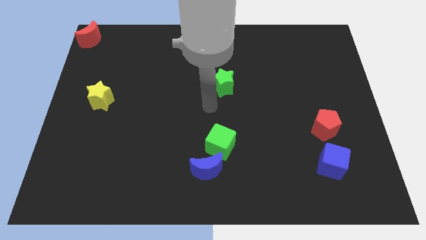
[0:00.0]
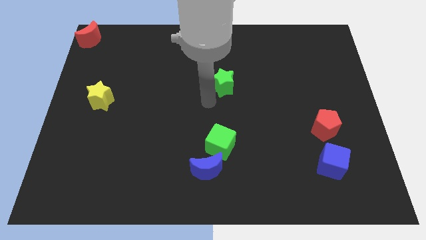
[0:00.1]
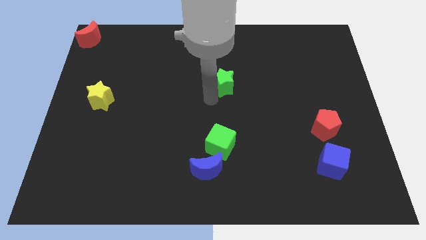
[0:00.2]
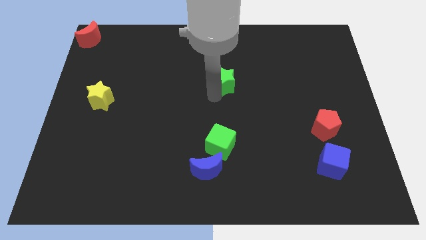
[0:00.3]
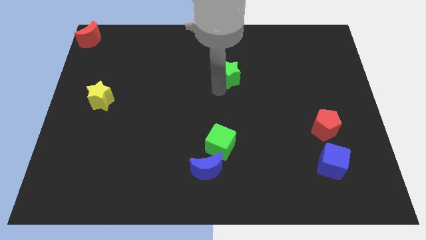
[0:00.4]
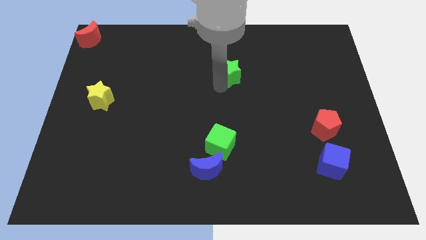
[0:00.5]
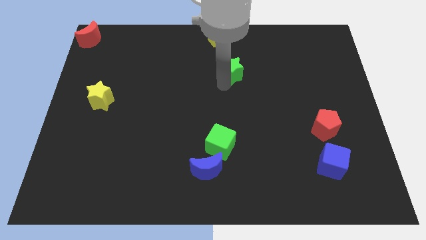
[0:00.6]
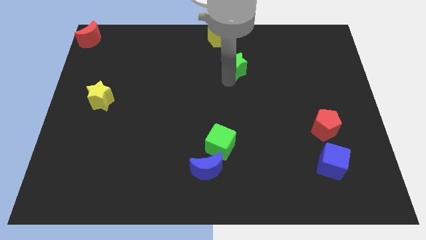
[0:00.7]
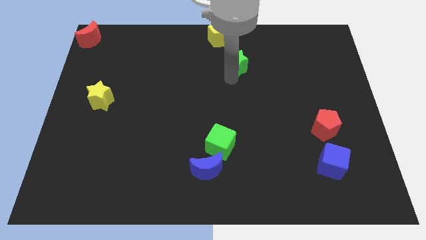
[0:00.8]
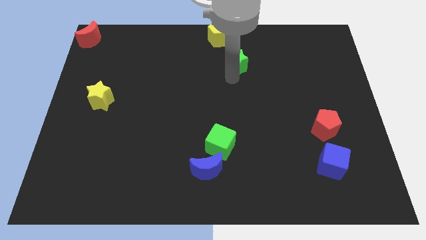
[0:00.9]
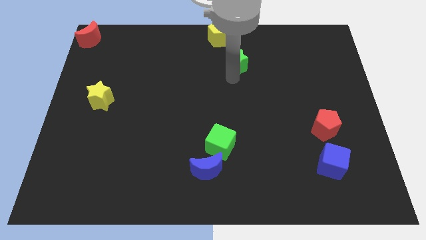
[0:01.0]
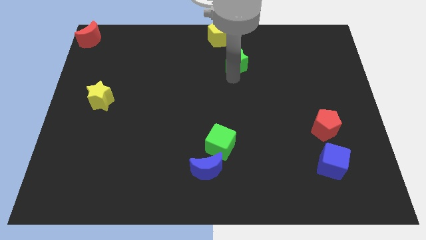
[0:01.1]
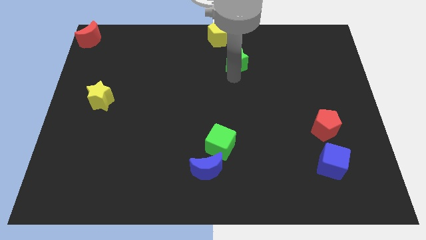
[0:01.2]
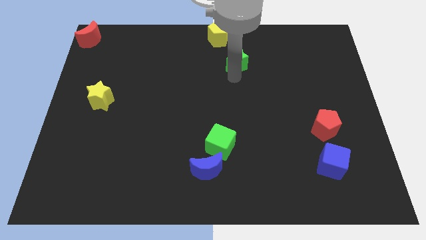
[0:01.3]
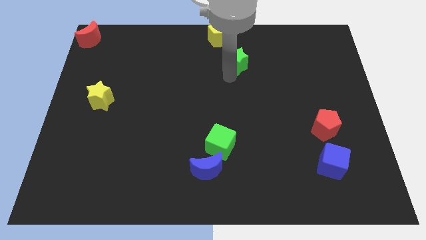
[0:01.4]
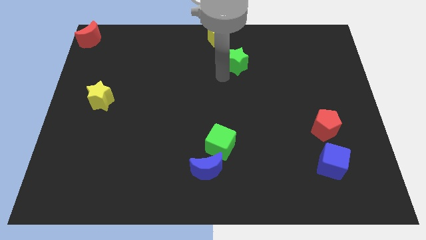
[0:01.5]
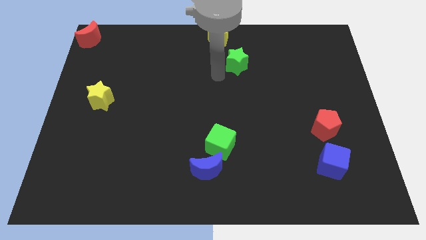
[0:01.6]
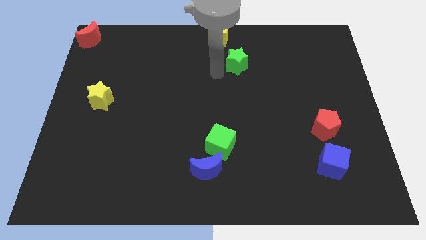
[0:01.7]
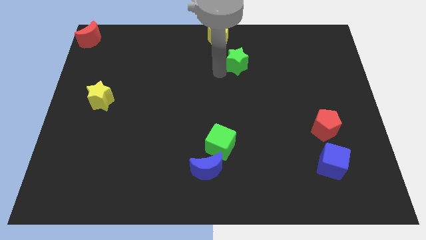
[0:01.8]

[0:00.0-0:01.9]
place the green star to the bottom right of yellow pentagon

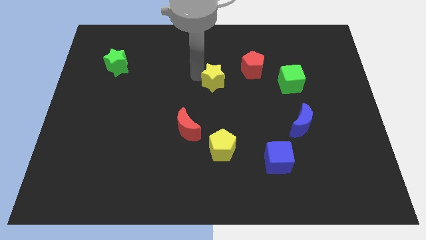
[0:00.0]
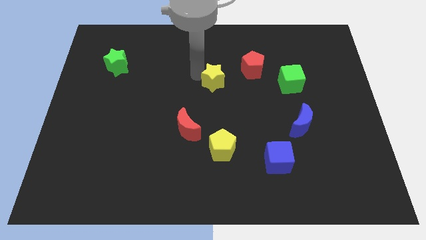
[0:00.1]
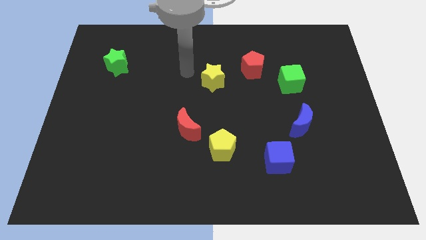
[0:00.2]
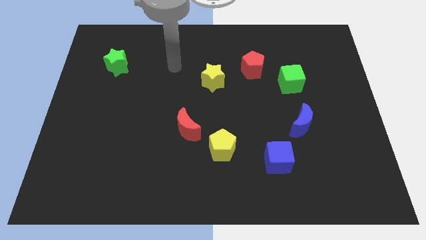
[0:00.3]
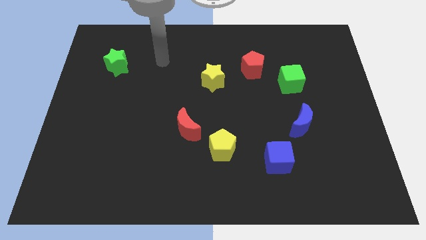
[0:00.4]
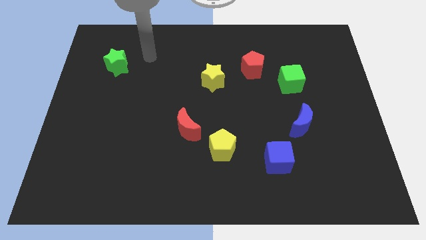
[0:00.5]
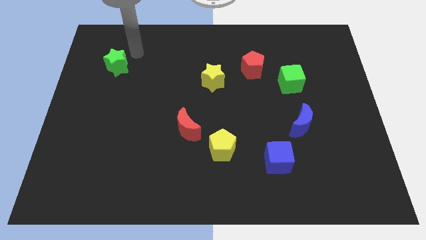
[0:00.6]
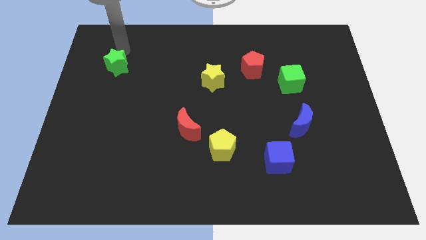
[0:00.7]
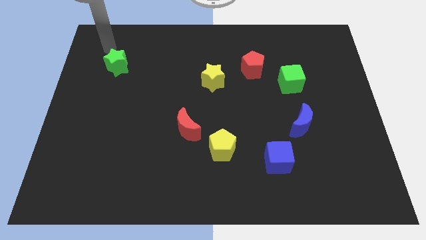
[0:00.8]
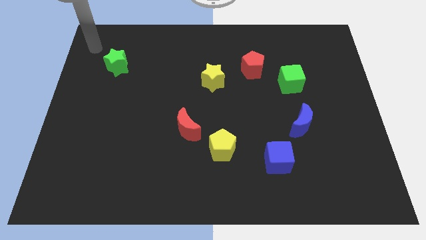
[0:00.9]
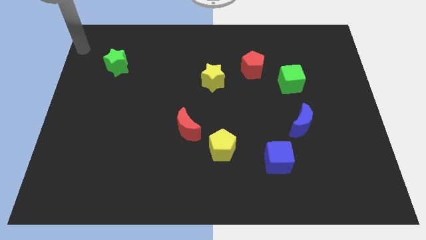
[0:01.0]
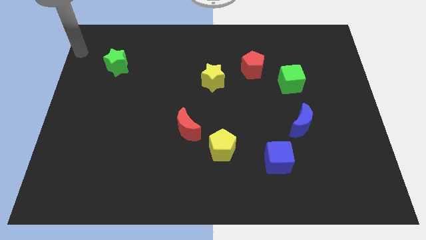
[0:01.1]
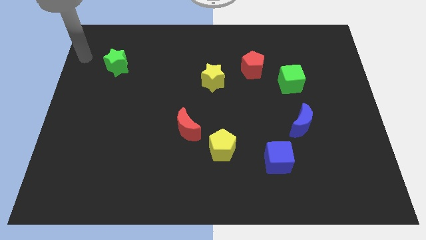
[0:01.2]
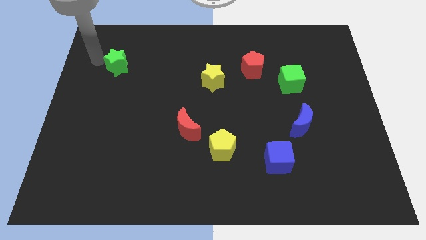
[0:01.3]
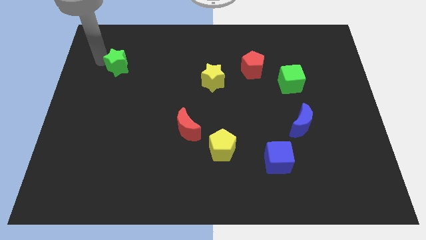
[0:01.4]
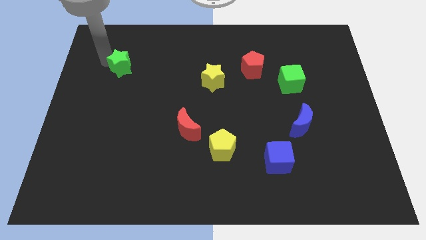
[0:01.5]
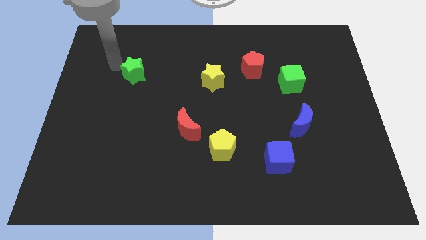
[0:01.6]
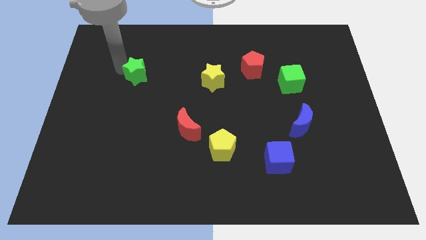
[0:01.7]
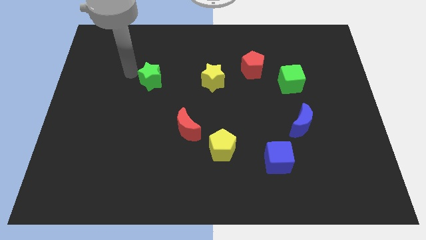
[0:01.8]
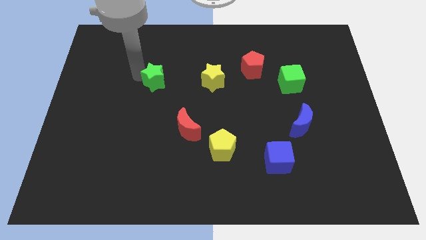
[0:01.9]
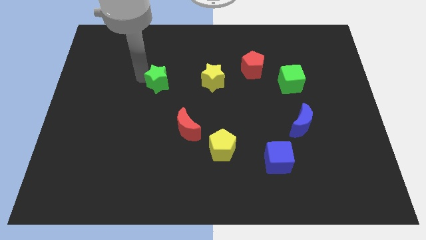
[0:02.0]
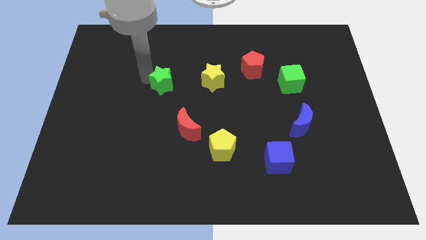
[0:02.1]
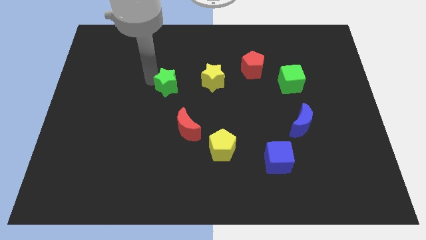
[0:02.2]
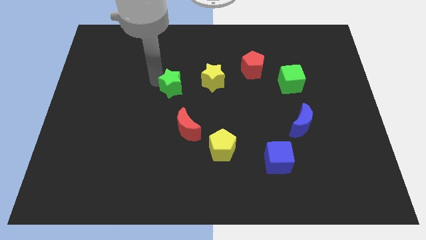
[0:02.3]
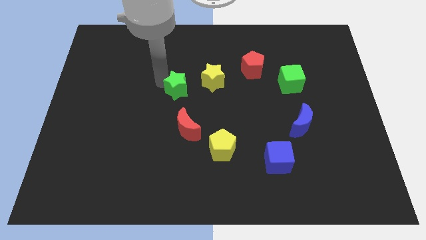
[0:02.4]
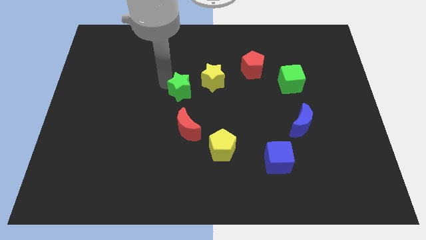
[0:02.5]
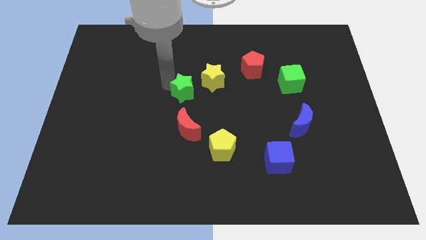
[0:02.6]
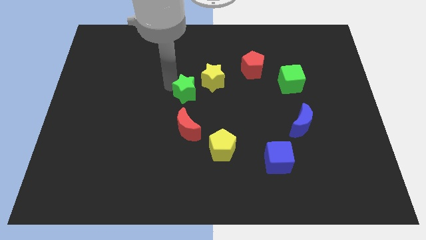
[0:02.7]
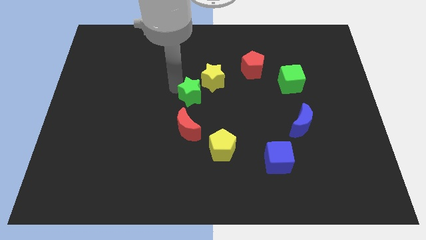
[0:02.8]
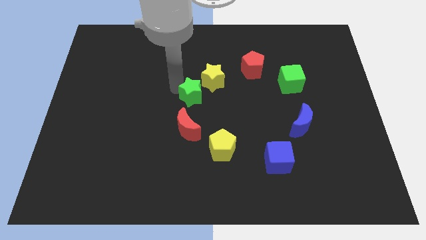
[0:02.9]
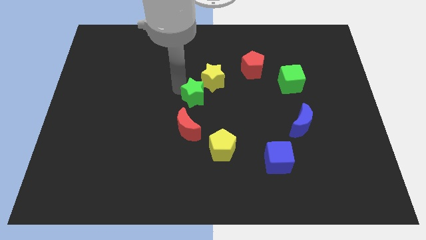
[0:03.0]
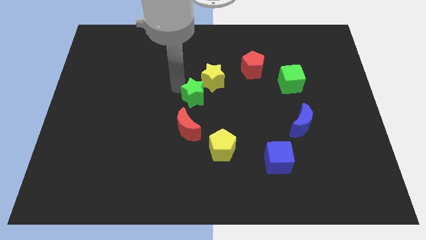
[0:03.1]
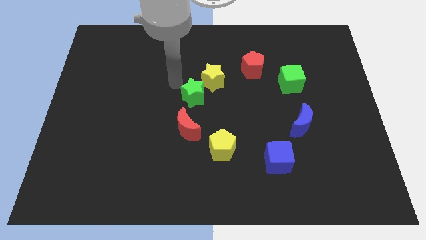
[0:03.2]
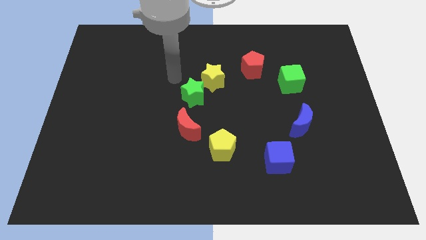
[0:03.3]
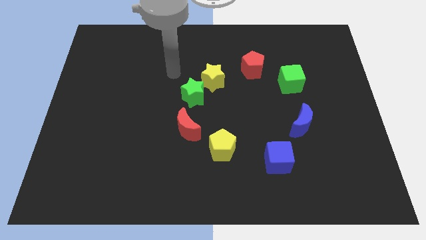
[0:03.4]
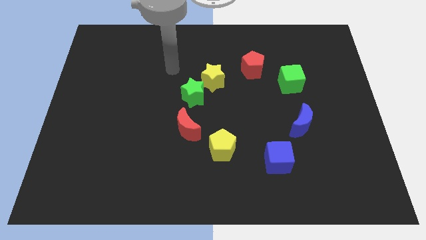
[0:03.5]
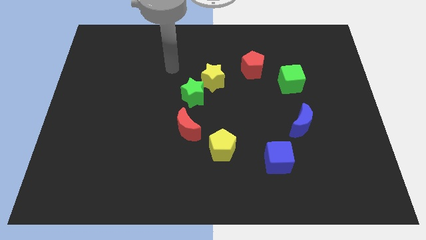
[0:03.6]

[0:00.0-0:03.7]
place the green star in between the yellow star and red moon

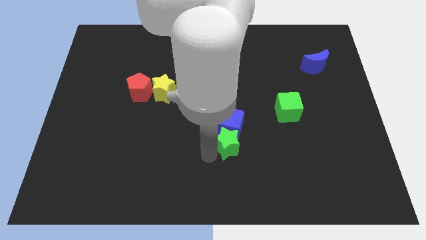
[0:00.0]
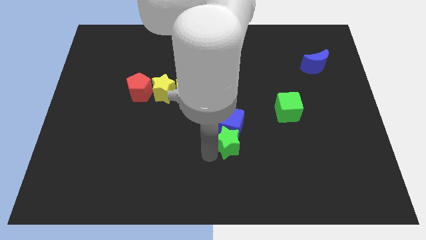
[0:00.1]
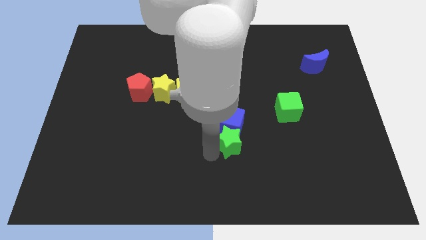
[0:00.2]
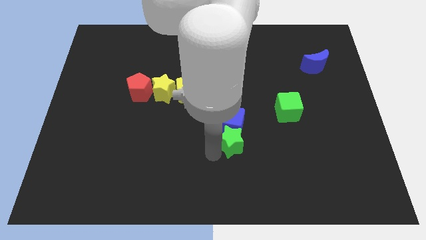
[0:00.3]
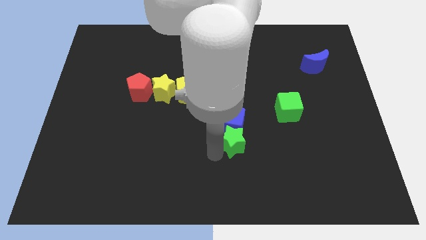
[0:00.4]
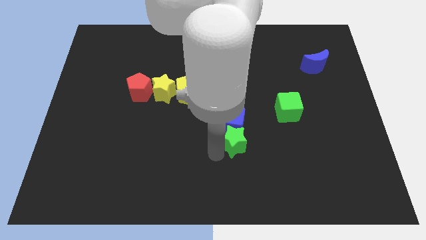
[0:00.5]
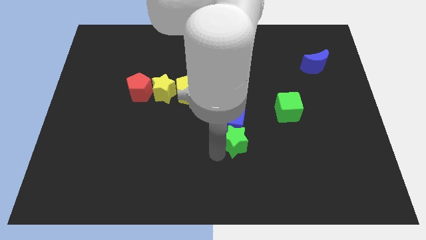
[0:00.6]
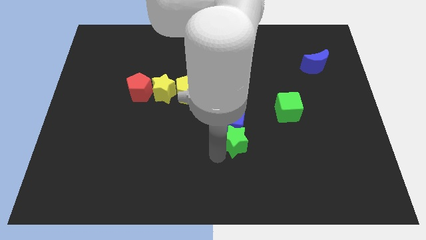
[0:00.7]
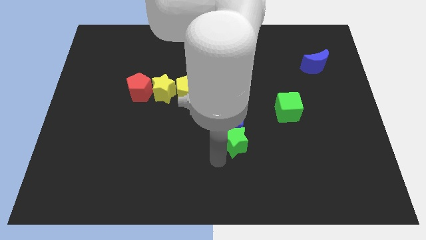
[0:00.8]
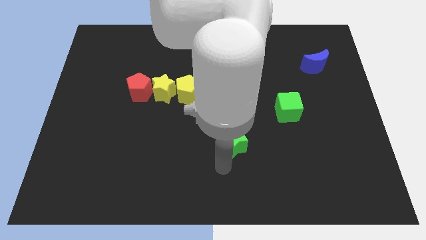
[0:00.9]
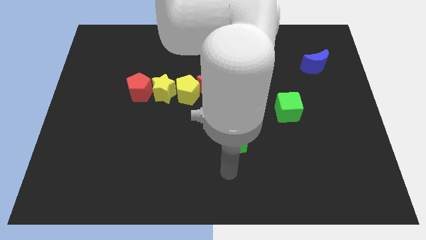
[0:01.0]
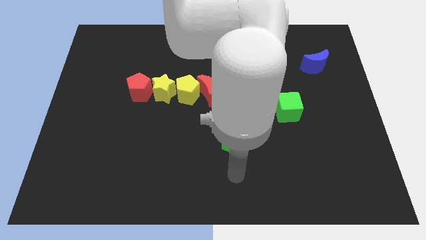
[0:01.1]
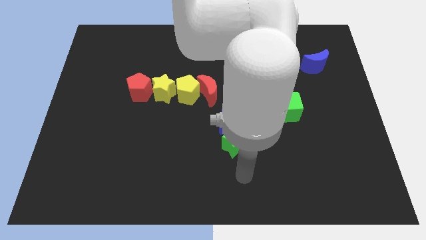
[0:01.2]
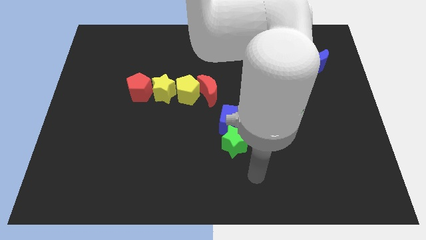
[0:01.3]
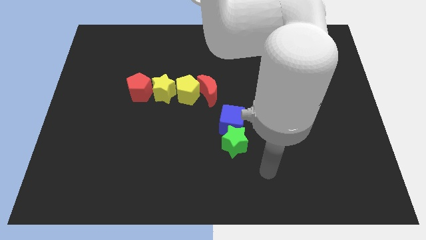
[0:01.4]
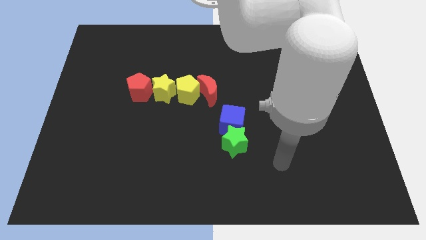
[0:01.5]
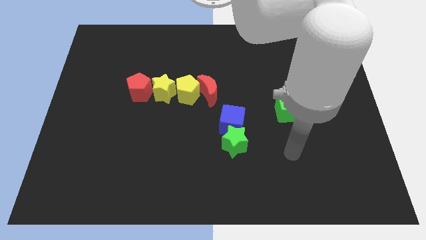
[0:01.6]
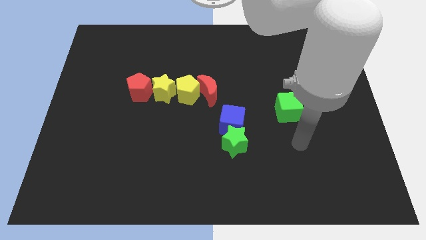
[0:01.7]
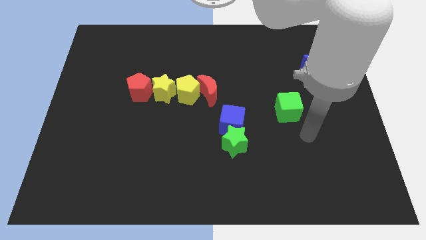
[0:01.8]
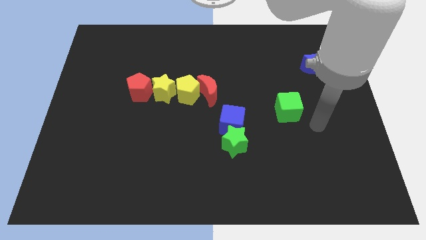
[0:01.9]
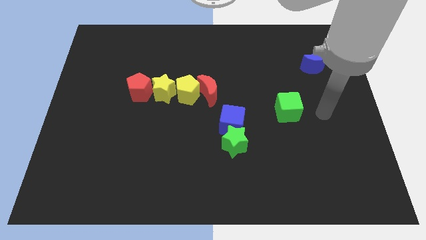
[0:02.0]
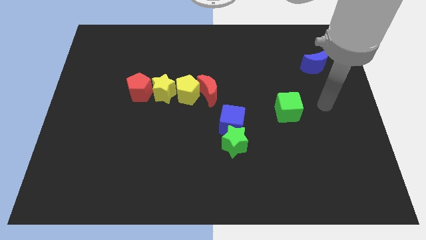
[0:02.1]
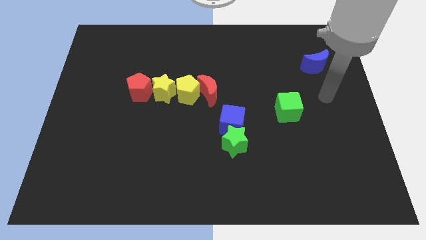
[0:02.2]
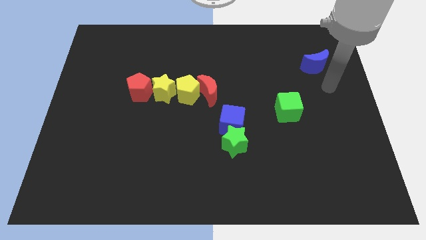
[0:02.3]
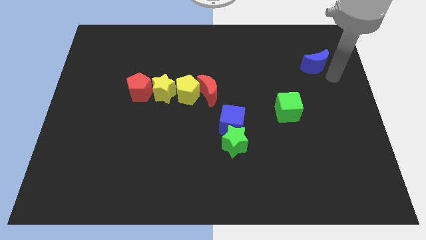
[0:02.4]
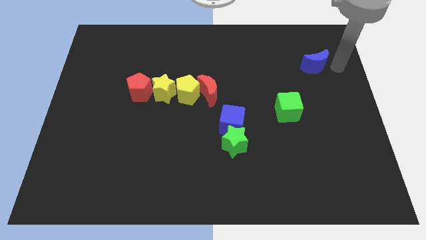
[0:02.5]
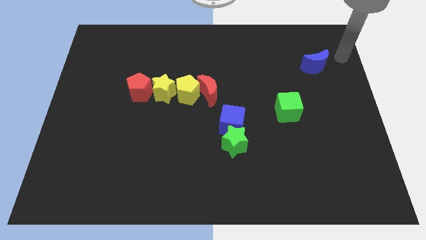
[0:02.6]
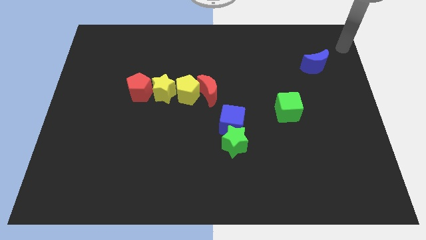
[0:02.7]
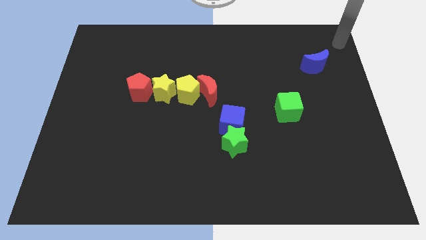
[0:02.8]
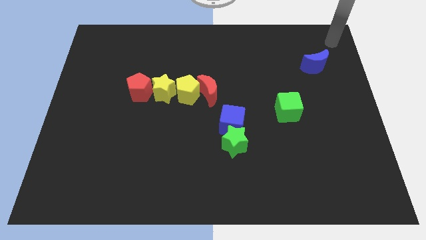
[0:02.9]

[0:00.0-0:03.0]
move the arm towards the top right corner of the board

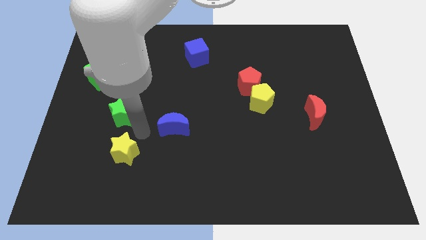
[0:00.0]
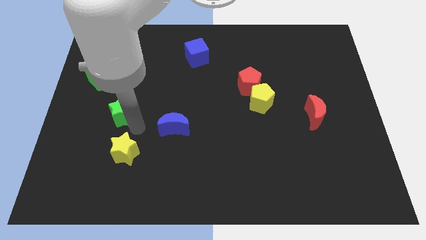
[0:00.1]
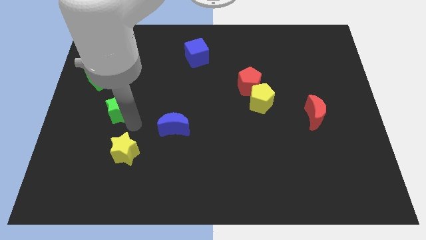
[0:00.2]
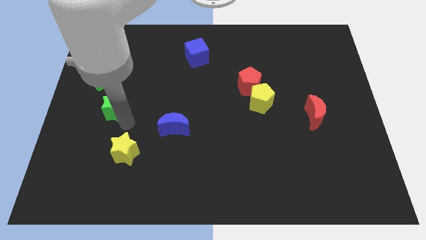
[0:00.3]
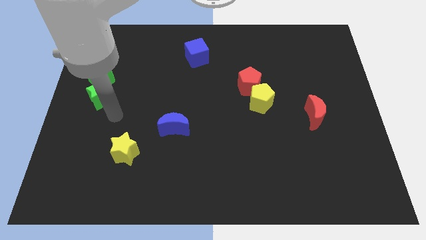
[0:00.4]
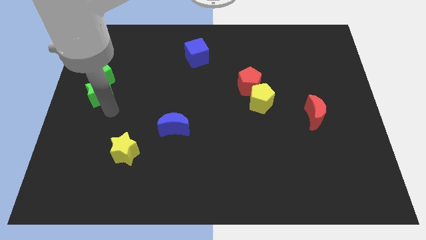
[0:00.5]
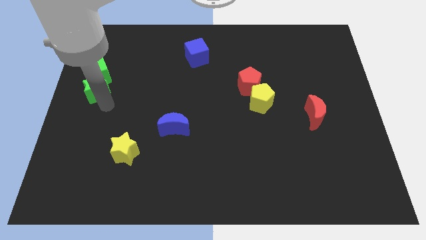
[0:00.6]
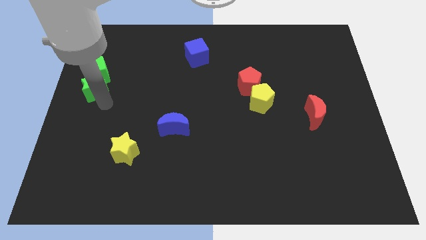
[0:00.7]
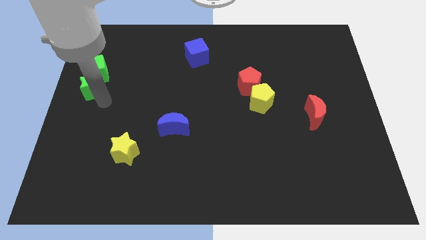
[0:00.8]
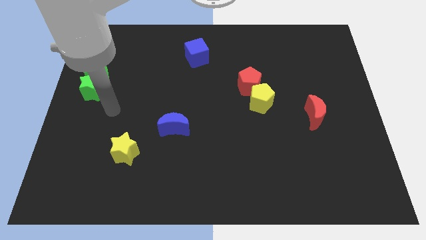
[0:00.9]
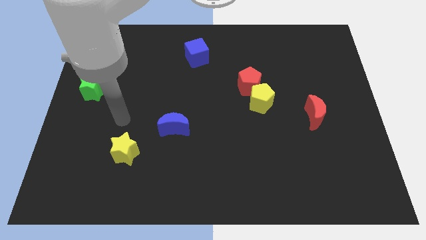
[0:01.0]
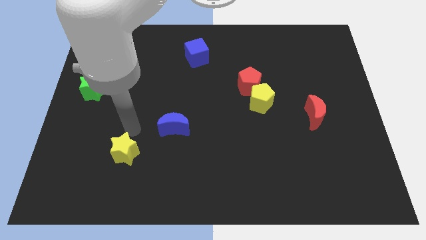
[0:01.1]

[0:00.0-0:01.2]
push the green star into the green cube
